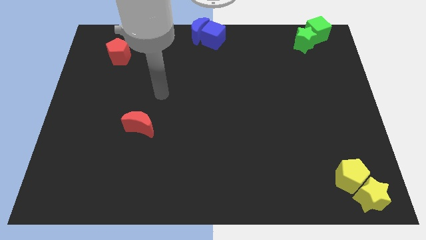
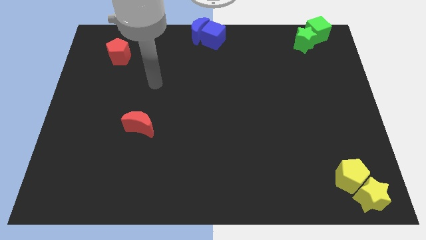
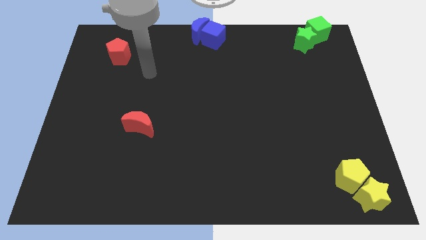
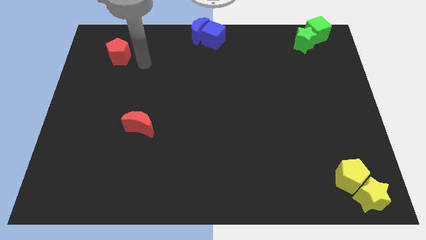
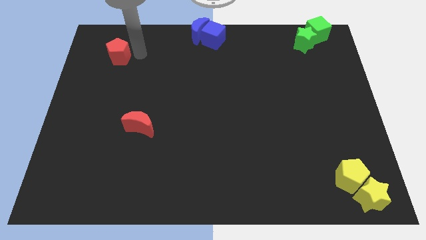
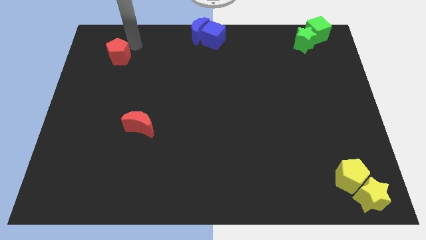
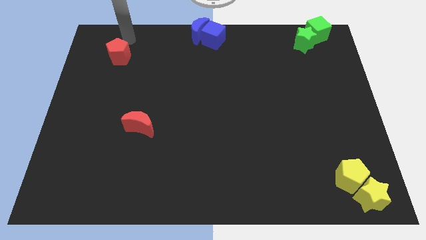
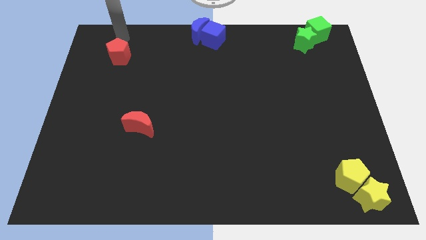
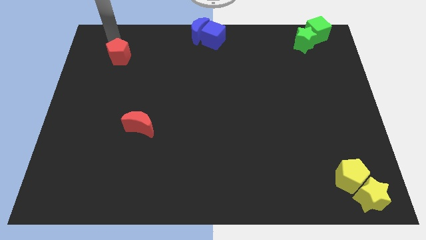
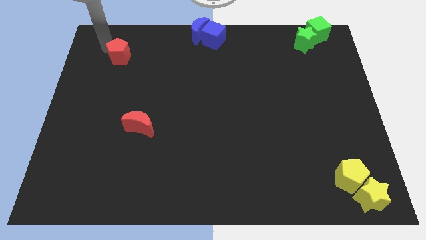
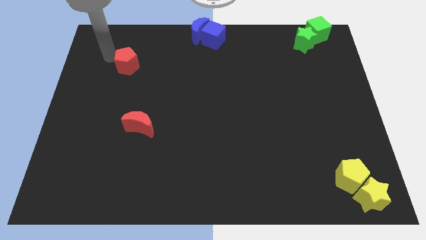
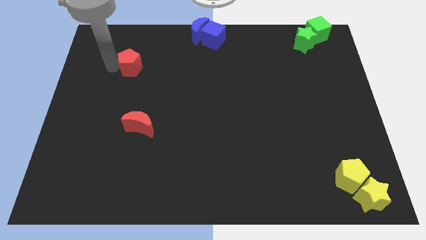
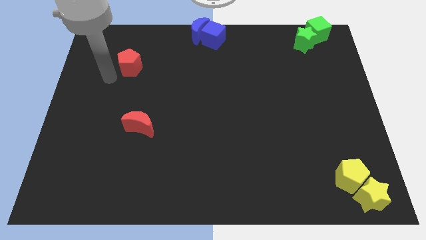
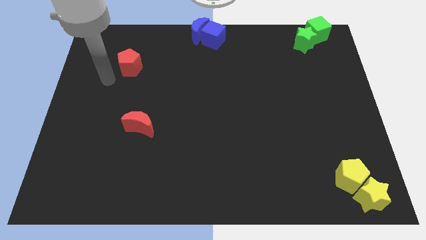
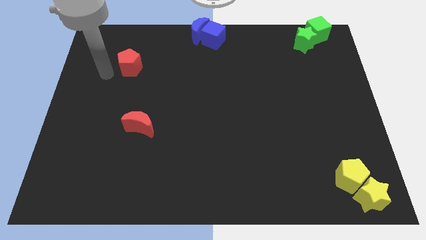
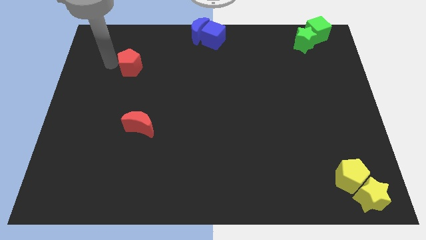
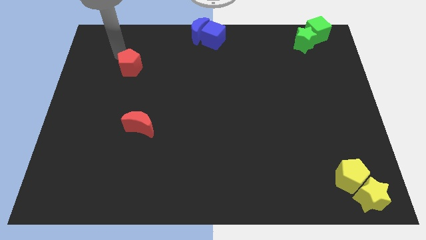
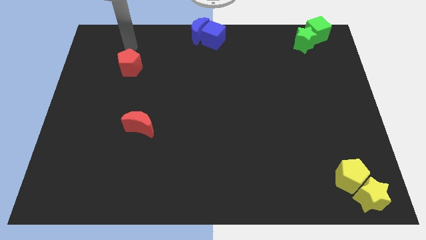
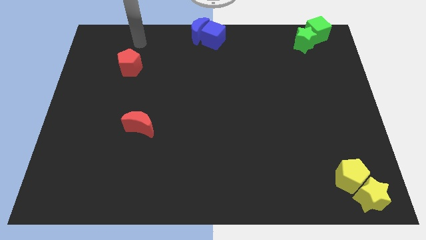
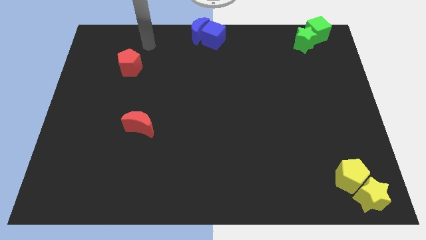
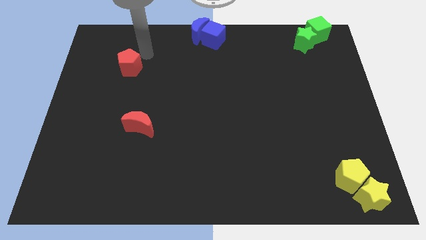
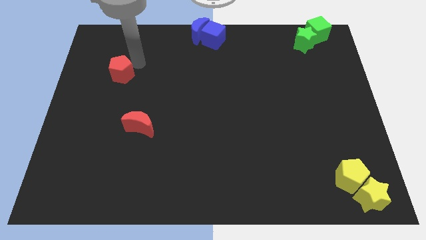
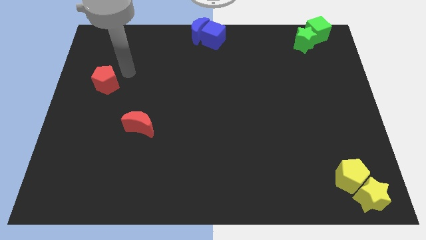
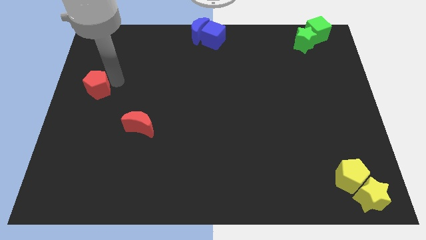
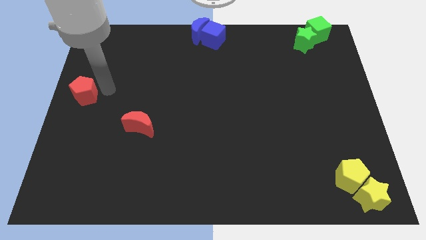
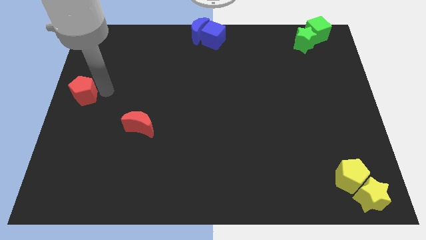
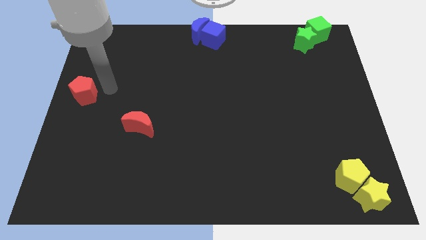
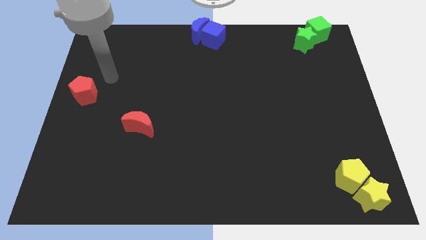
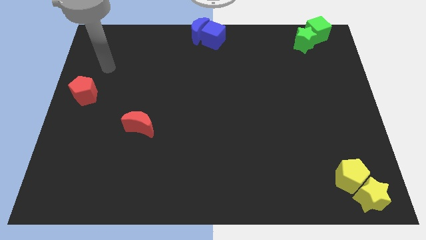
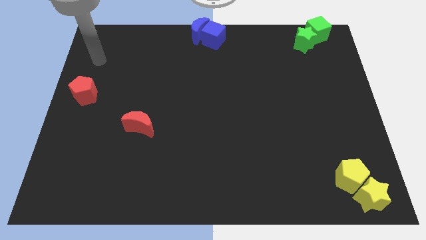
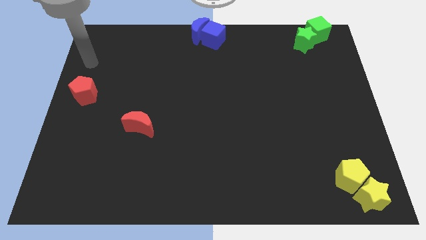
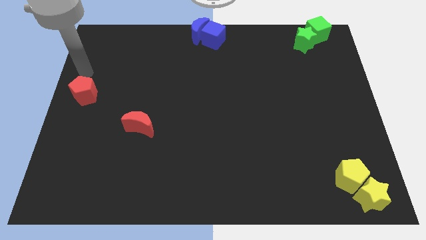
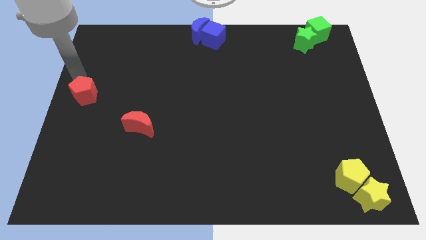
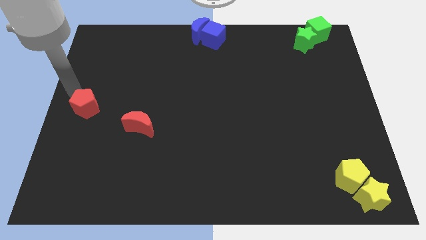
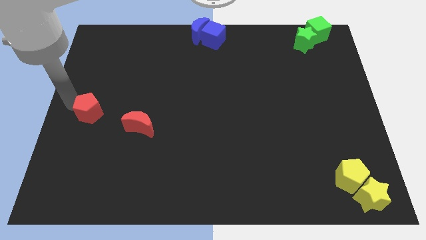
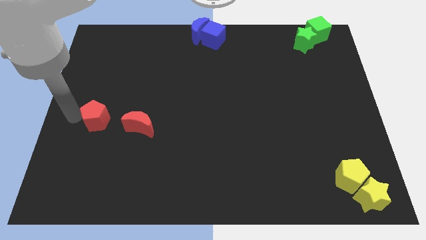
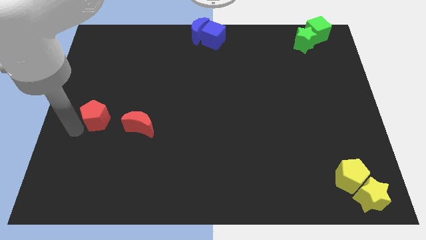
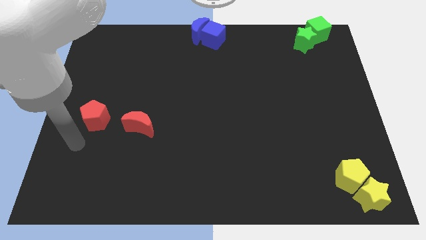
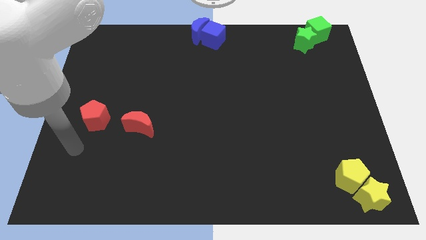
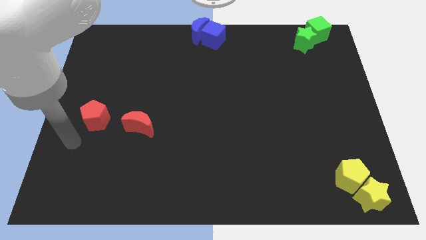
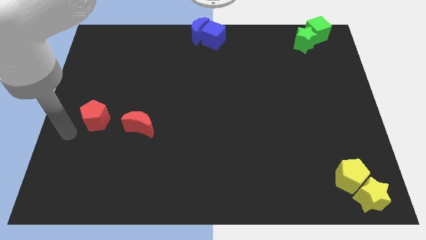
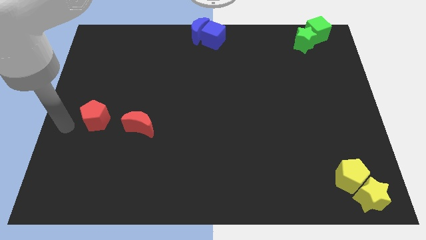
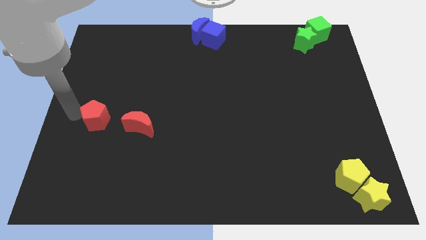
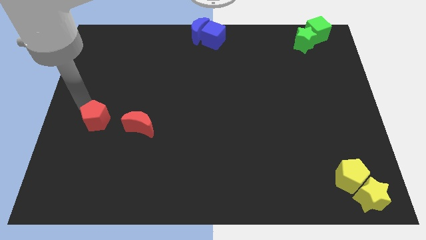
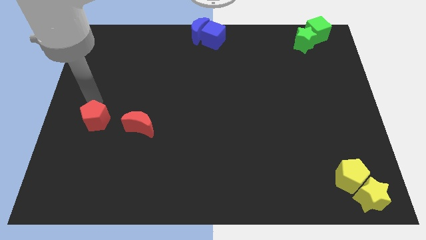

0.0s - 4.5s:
place the red pentagon left to the red moon

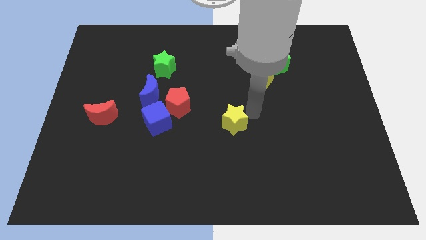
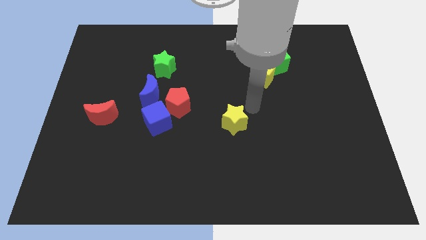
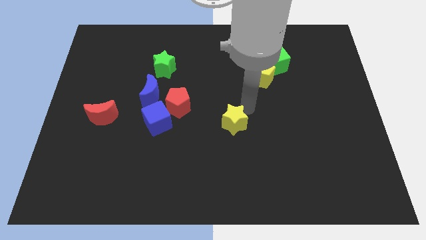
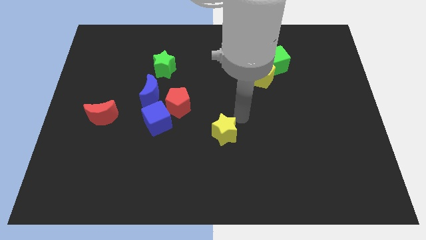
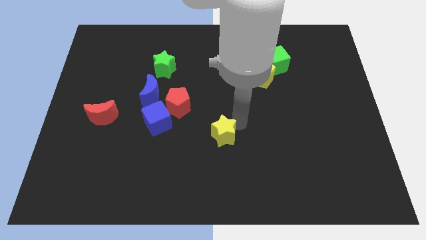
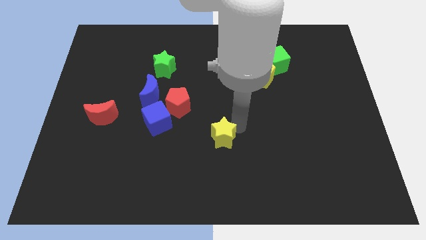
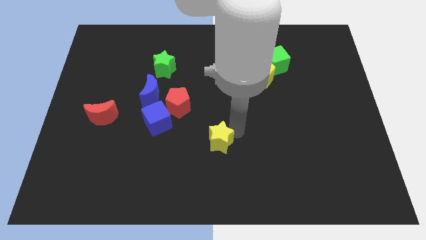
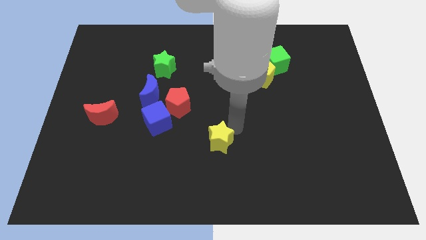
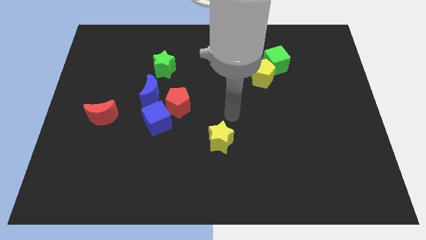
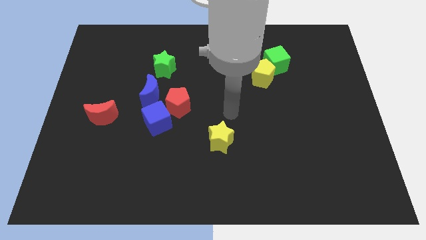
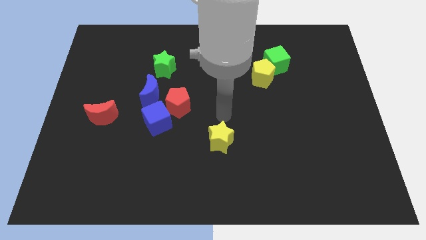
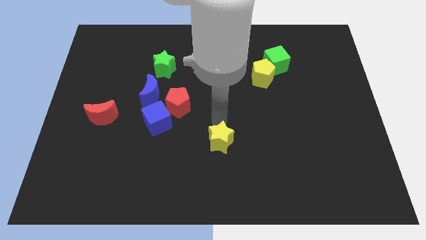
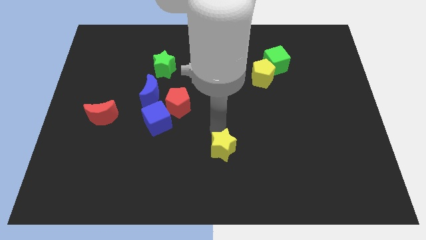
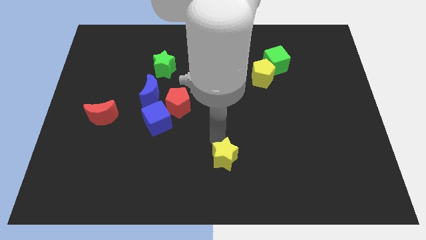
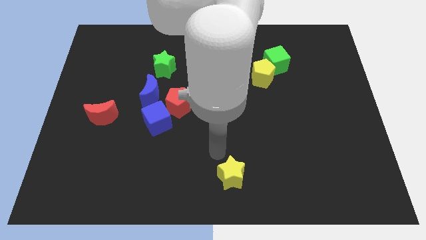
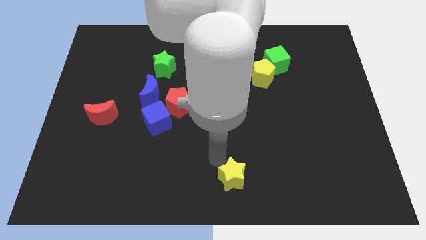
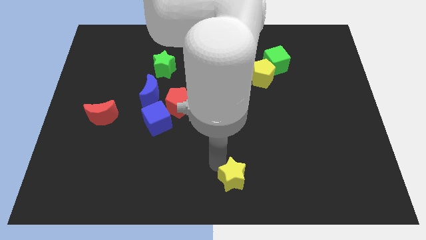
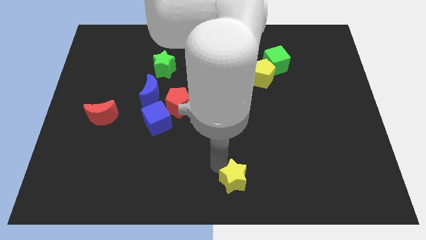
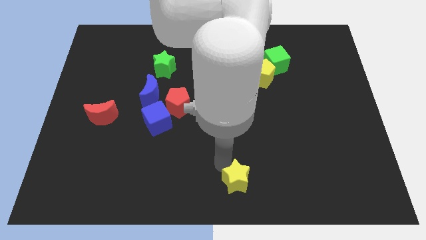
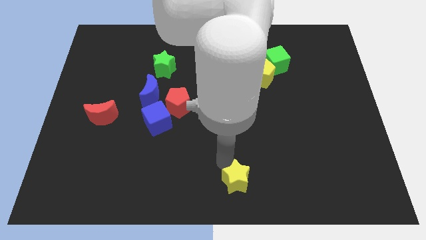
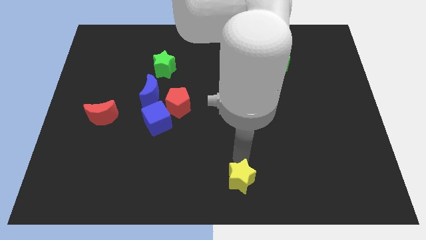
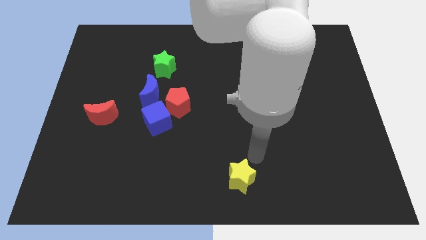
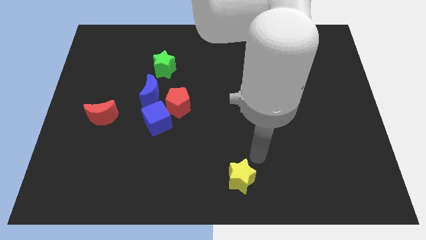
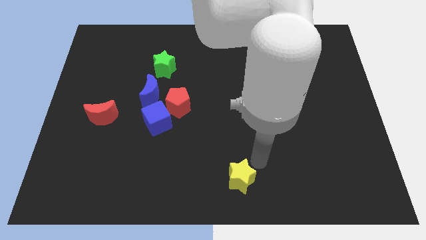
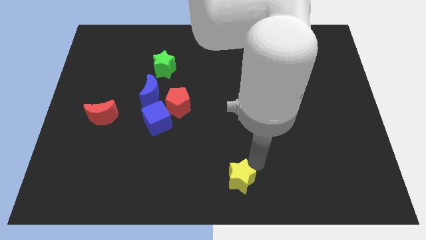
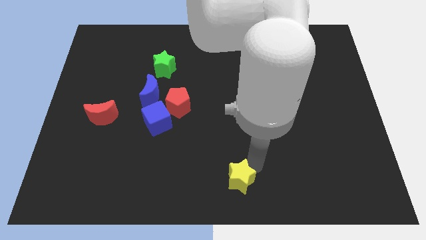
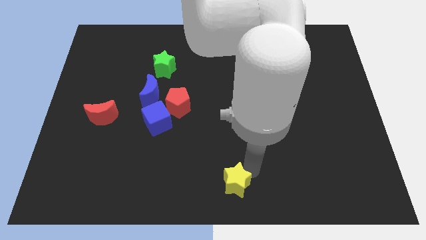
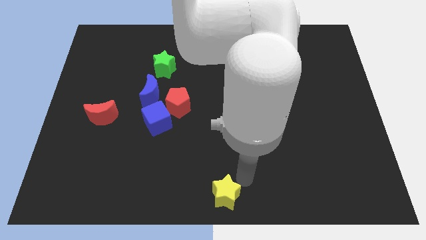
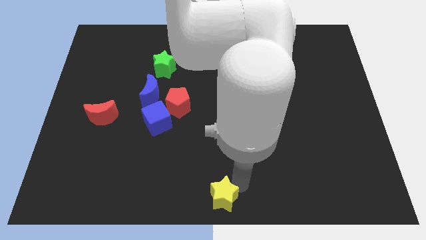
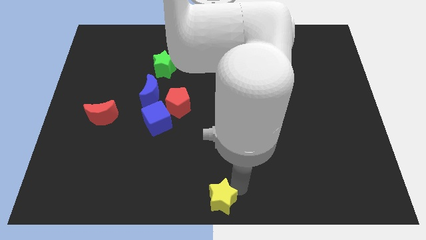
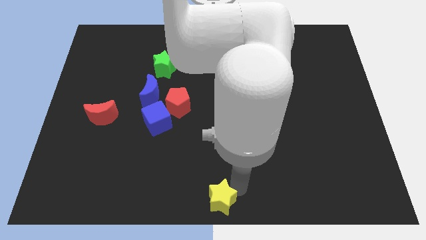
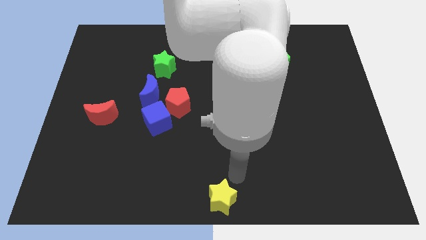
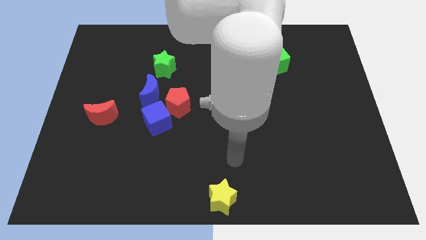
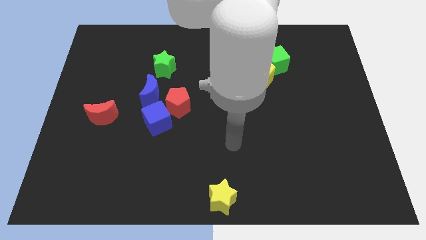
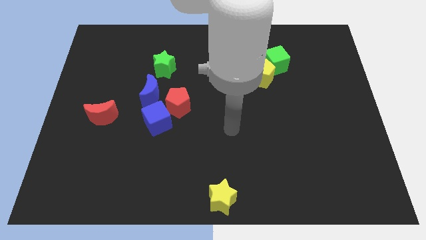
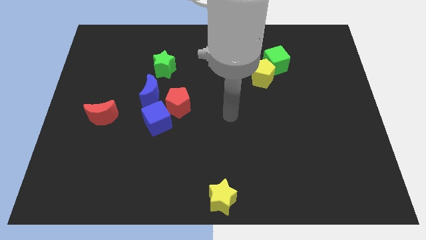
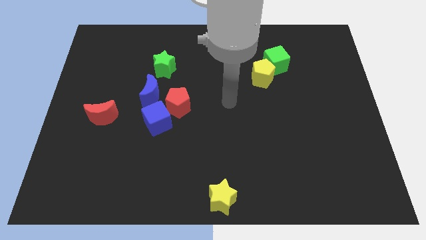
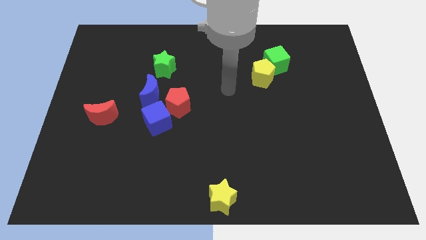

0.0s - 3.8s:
push the yellow star towards the bottom center

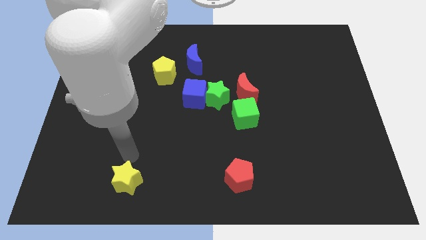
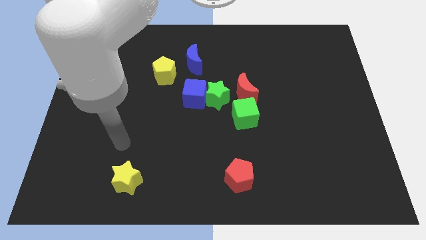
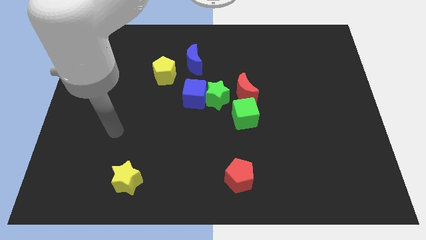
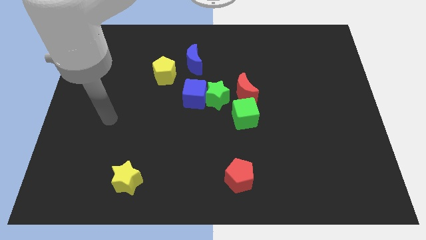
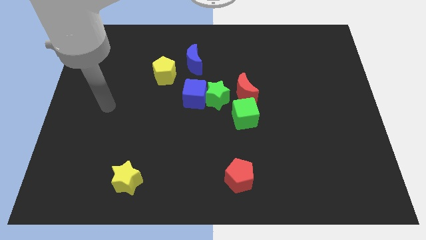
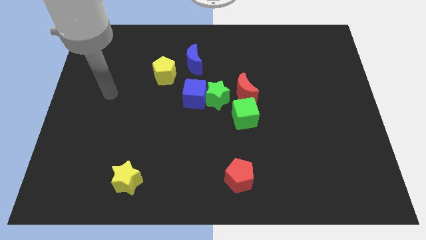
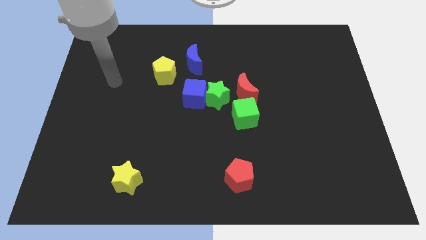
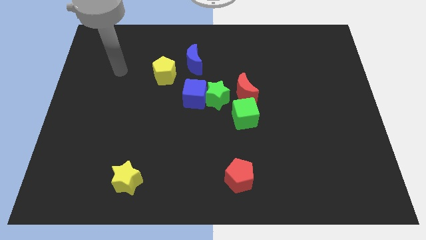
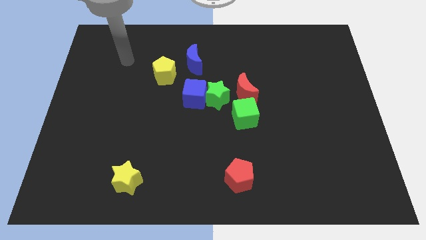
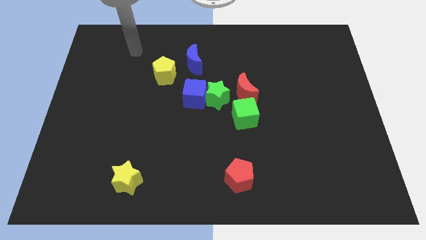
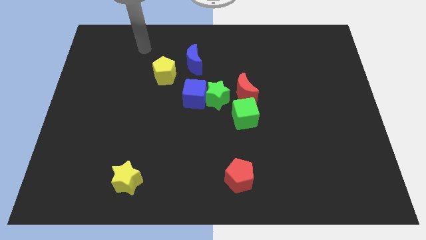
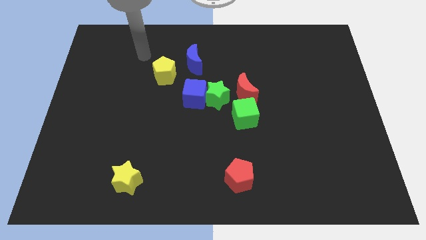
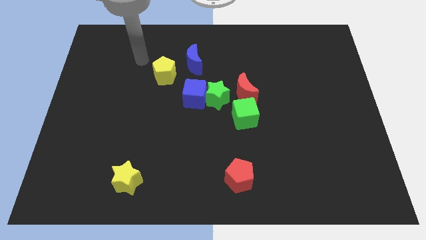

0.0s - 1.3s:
move your hand towards the yellow pentagon
